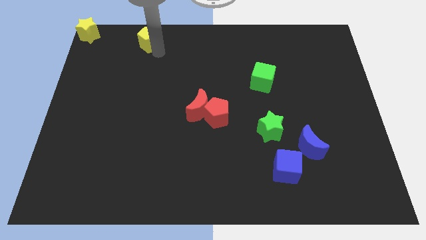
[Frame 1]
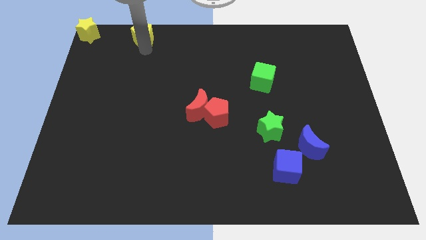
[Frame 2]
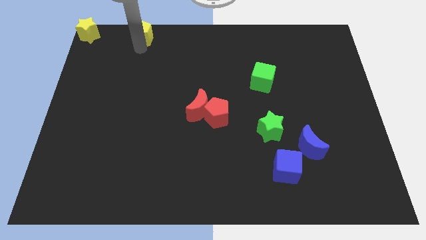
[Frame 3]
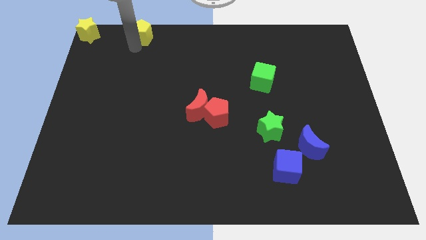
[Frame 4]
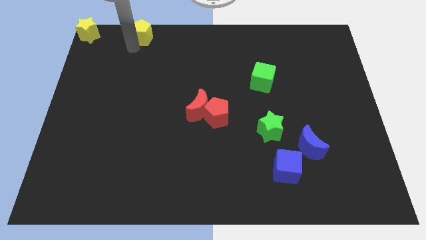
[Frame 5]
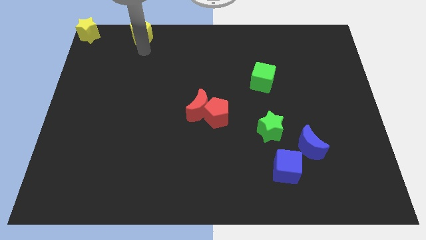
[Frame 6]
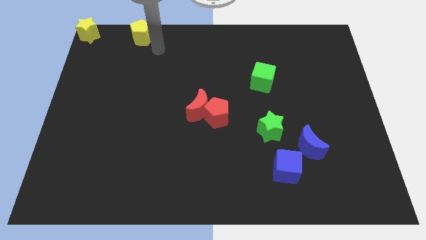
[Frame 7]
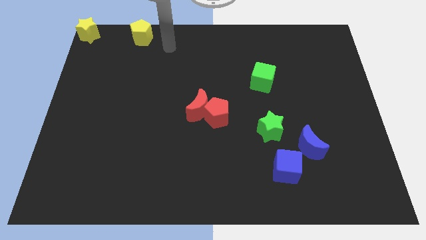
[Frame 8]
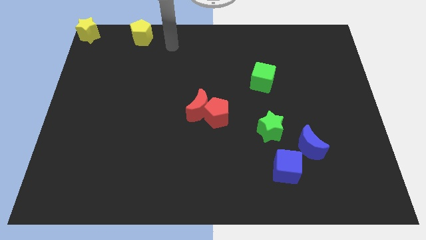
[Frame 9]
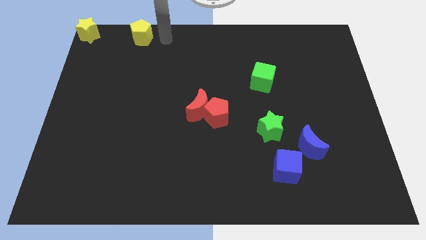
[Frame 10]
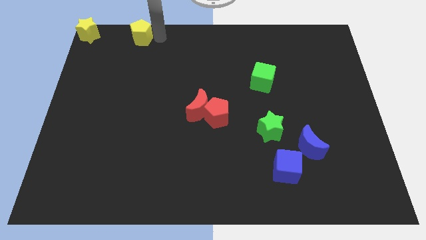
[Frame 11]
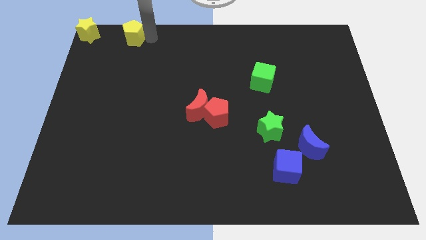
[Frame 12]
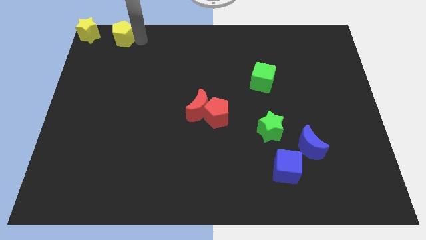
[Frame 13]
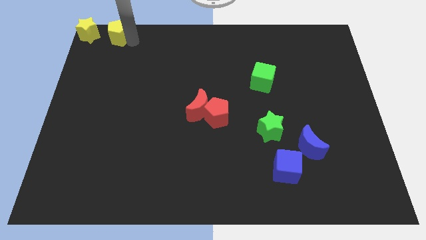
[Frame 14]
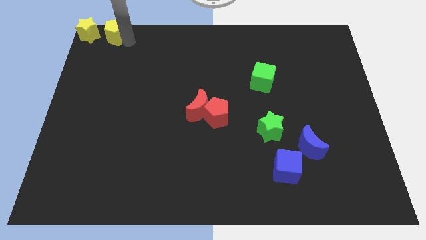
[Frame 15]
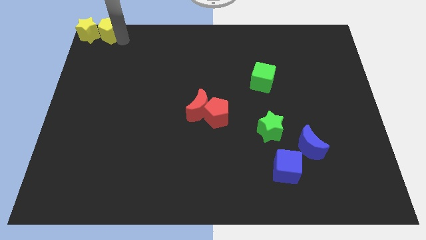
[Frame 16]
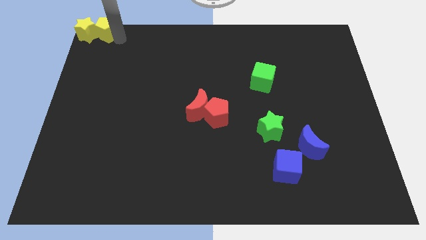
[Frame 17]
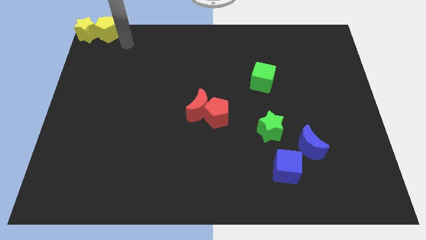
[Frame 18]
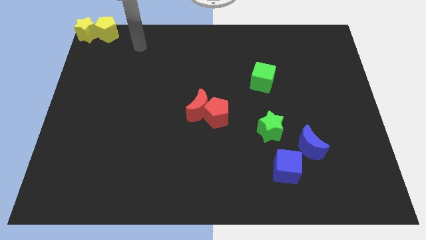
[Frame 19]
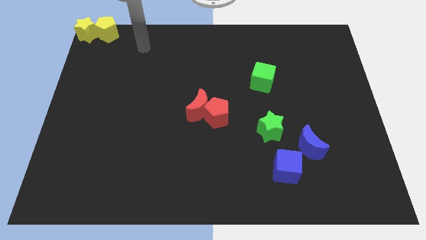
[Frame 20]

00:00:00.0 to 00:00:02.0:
push the yellow pentagon to the right of yellow star

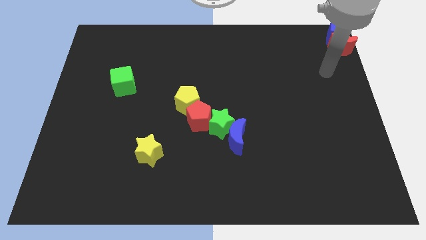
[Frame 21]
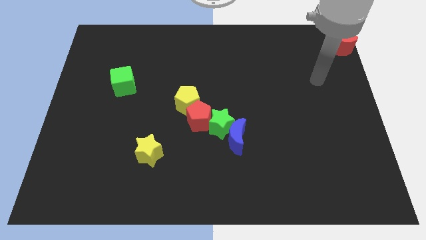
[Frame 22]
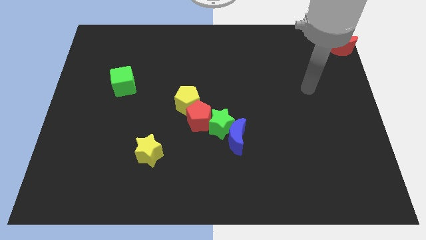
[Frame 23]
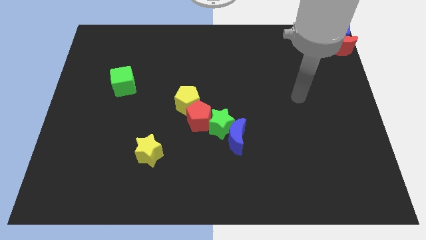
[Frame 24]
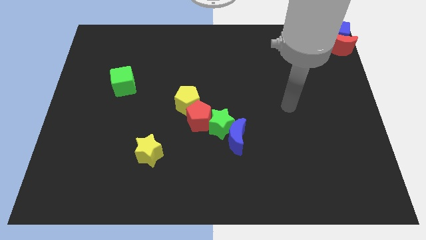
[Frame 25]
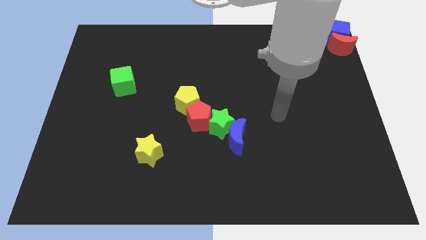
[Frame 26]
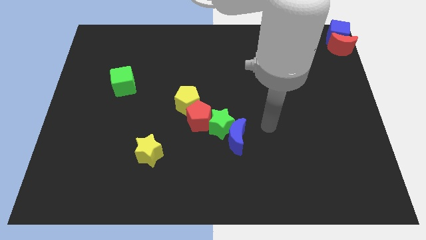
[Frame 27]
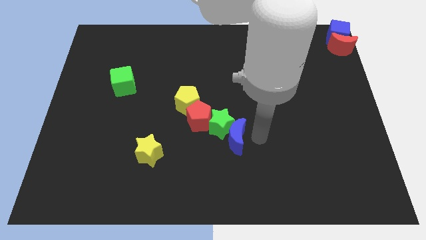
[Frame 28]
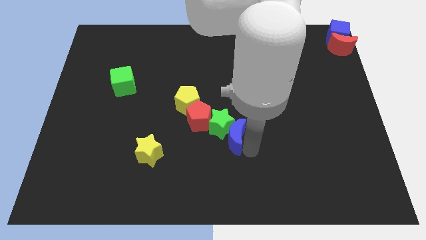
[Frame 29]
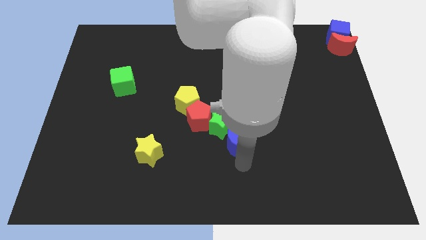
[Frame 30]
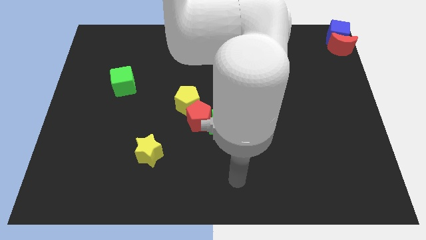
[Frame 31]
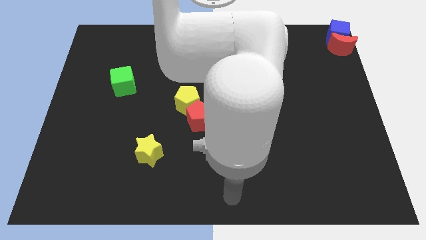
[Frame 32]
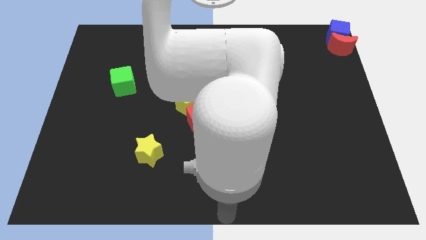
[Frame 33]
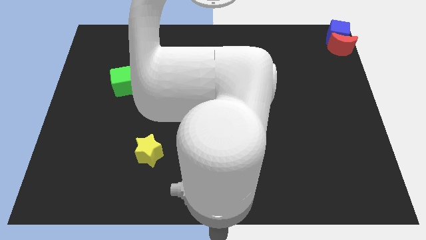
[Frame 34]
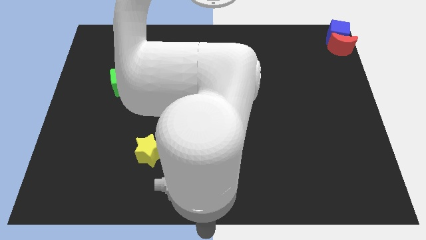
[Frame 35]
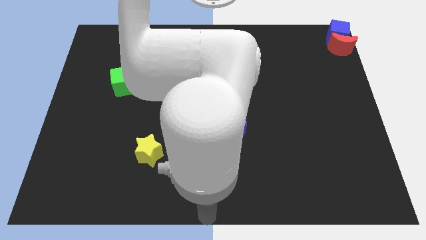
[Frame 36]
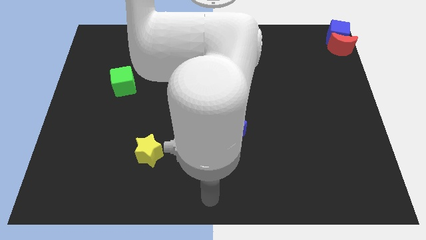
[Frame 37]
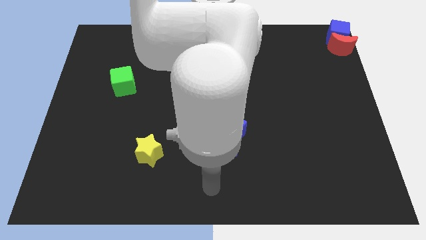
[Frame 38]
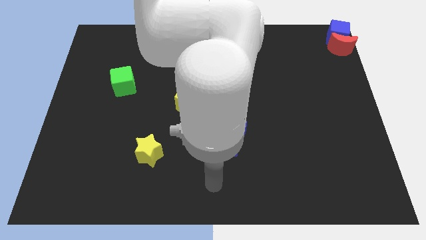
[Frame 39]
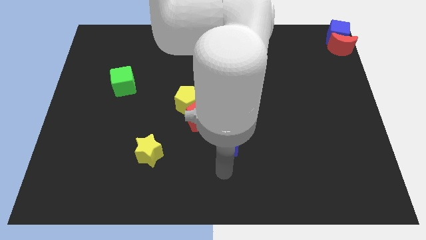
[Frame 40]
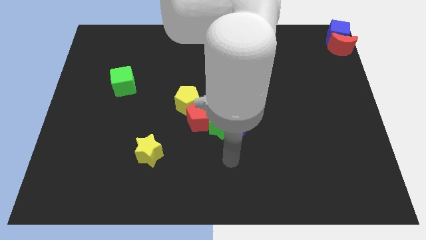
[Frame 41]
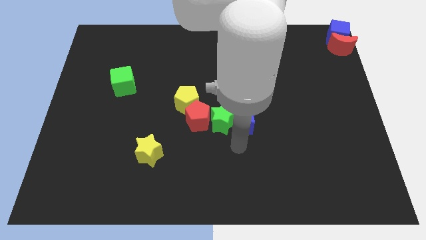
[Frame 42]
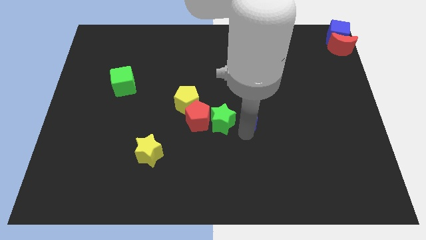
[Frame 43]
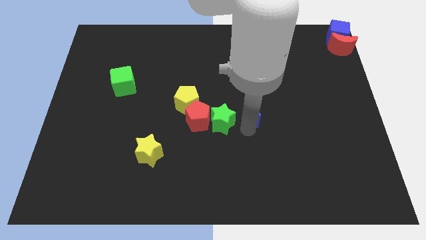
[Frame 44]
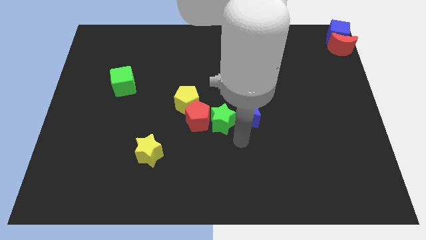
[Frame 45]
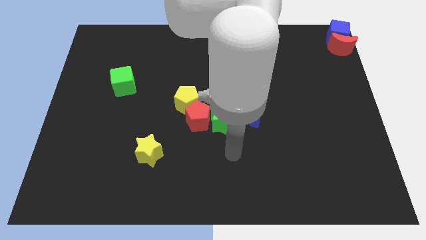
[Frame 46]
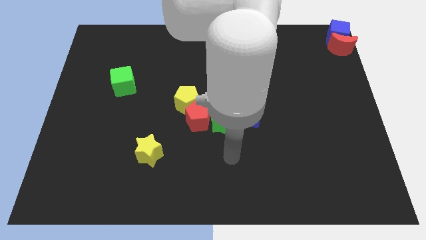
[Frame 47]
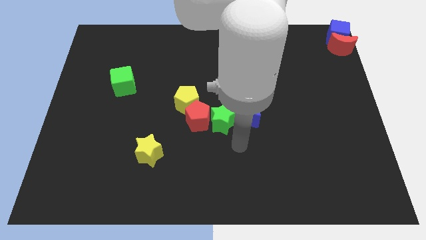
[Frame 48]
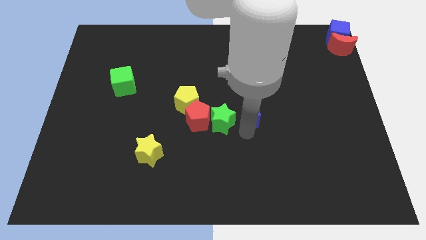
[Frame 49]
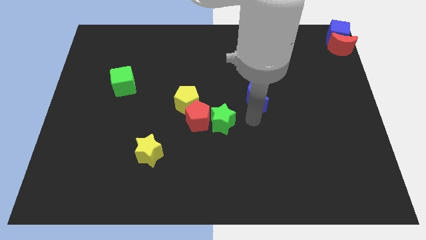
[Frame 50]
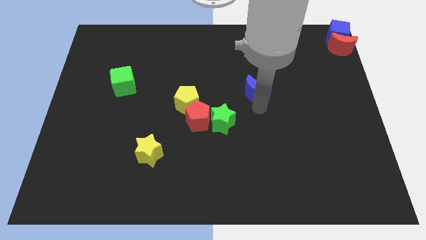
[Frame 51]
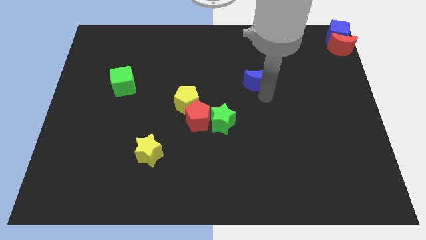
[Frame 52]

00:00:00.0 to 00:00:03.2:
push the blue crescent to the top right of the green star

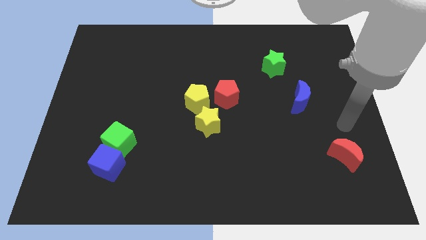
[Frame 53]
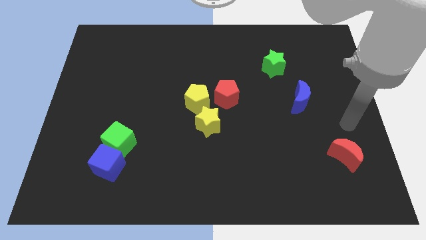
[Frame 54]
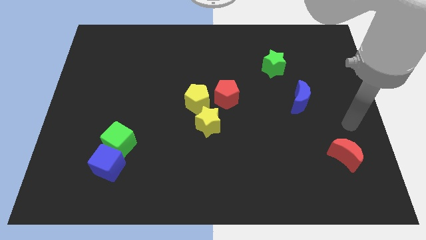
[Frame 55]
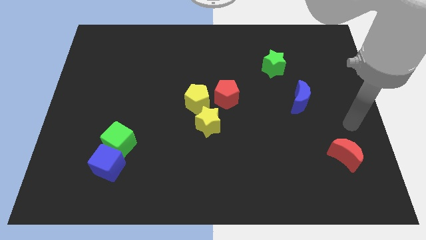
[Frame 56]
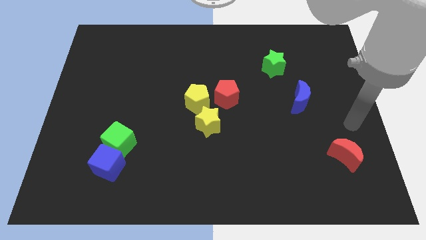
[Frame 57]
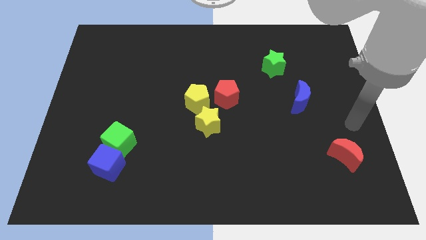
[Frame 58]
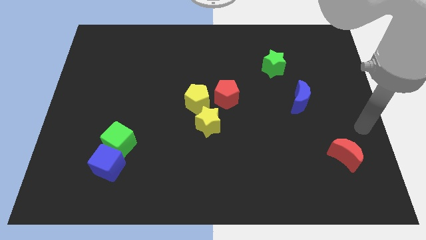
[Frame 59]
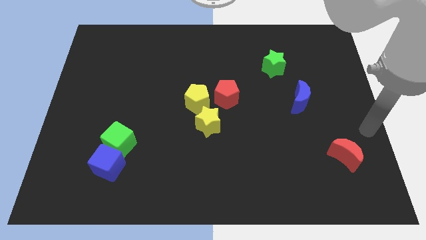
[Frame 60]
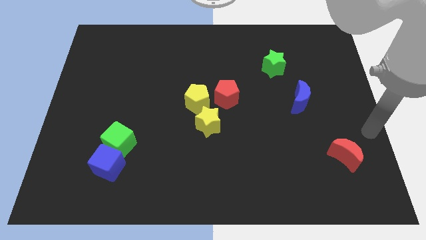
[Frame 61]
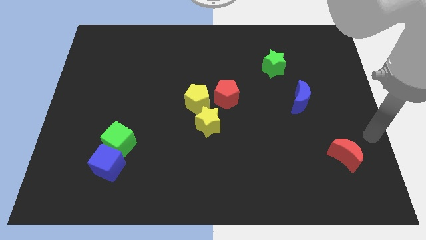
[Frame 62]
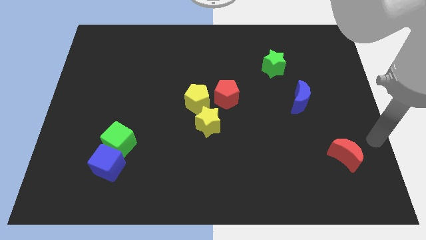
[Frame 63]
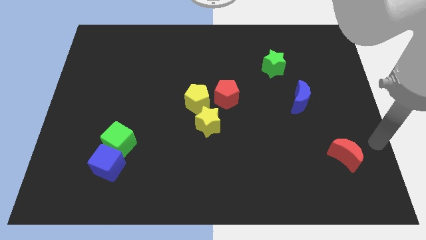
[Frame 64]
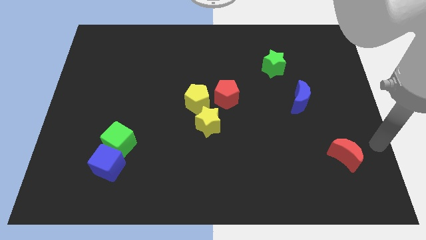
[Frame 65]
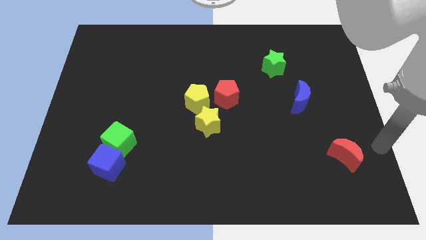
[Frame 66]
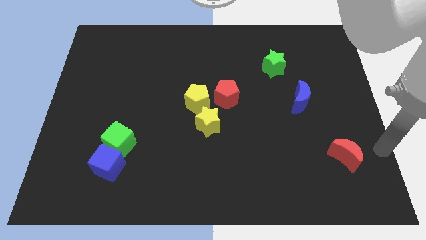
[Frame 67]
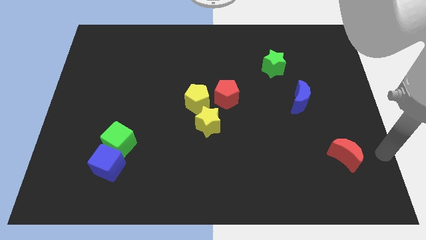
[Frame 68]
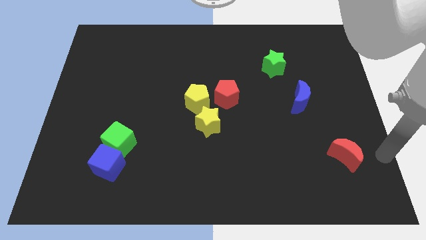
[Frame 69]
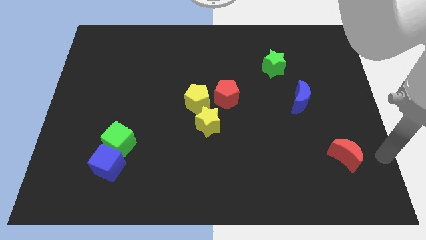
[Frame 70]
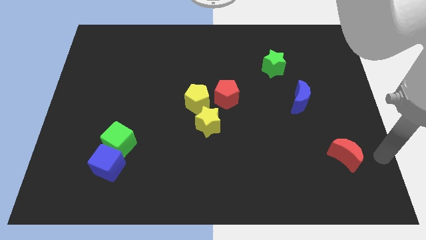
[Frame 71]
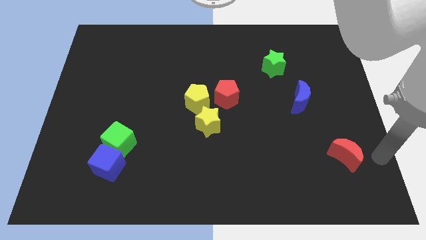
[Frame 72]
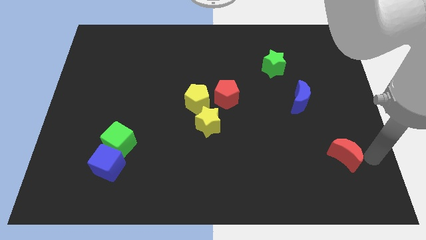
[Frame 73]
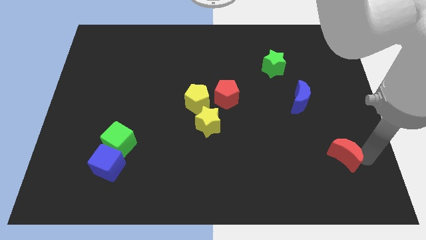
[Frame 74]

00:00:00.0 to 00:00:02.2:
move your arm to the right of red moon

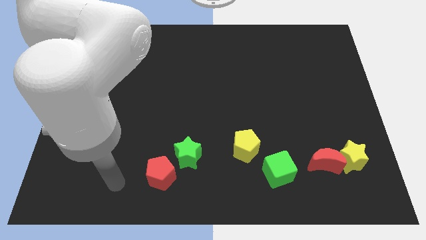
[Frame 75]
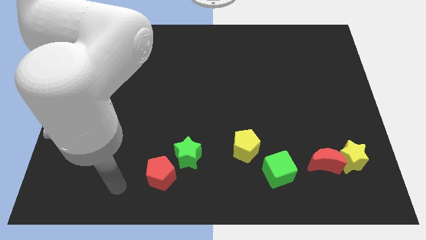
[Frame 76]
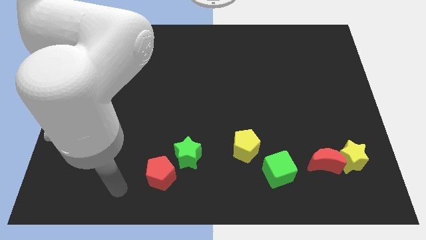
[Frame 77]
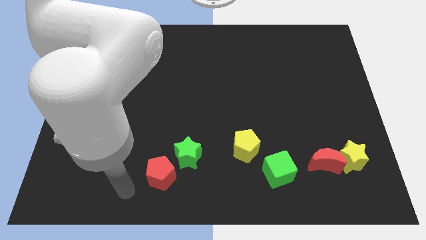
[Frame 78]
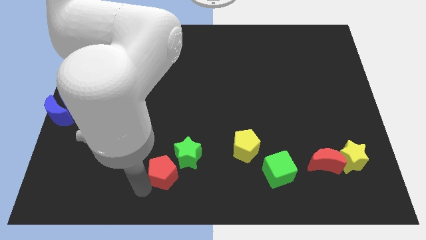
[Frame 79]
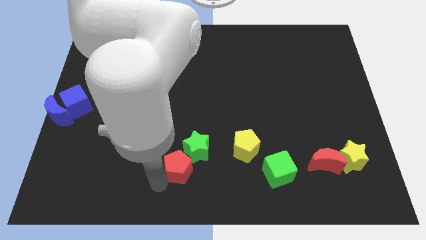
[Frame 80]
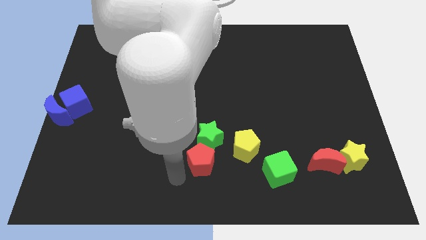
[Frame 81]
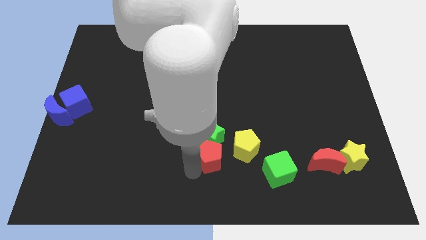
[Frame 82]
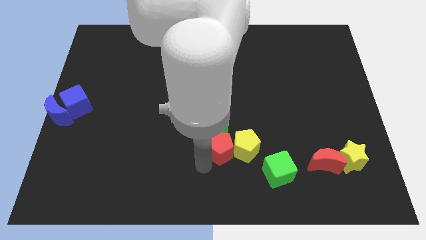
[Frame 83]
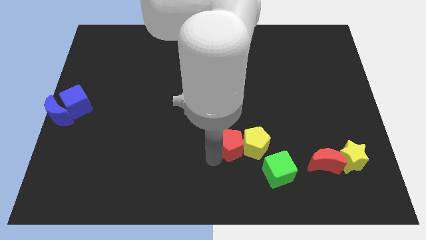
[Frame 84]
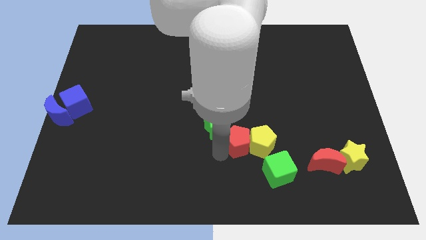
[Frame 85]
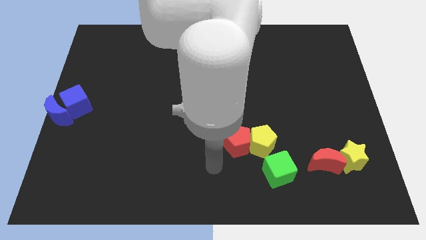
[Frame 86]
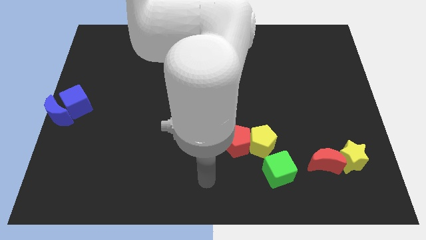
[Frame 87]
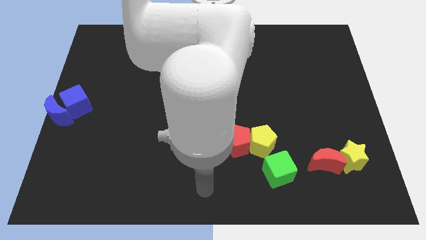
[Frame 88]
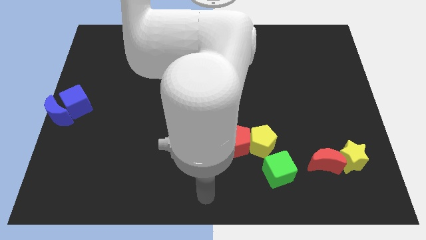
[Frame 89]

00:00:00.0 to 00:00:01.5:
push the red pentagon into the yellow pentagon
